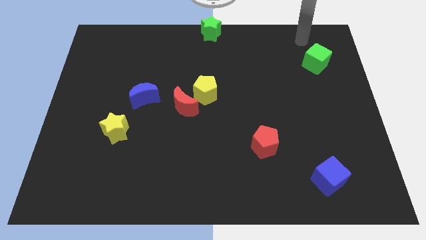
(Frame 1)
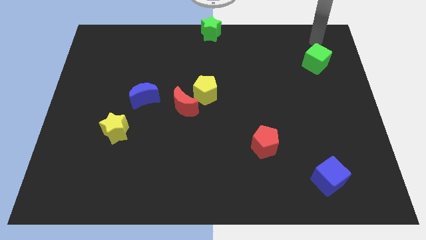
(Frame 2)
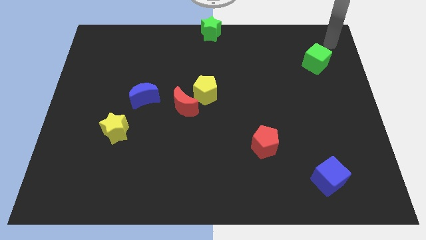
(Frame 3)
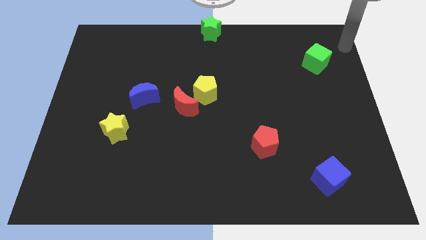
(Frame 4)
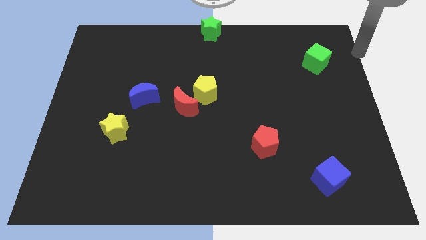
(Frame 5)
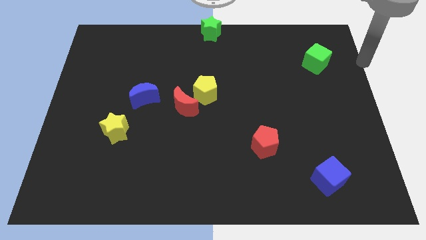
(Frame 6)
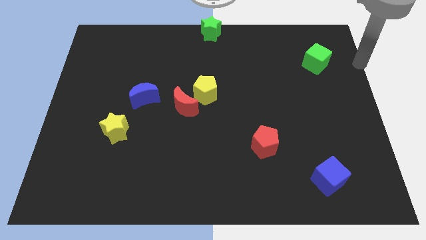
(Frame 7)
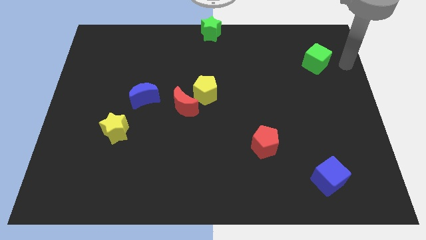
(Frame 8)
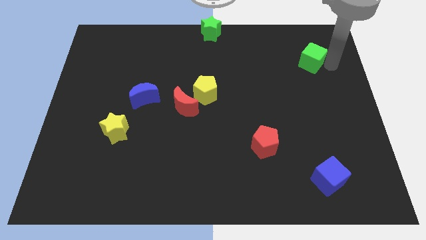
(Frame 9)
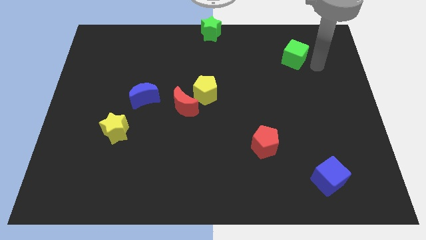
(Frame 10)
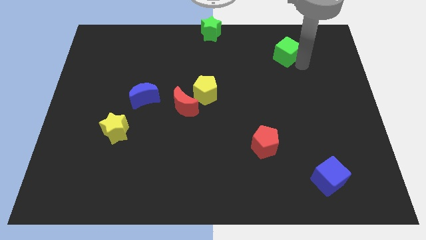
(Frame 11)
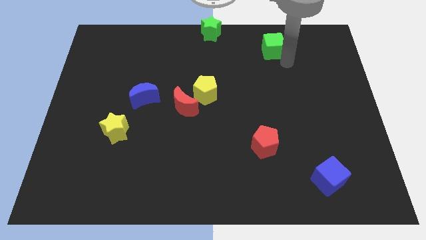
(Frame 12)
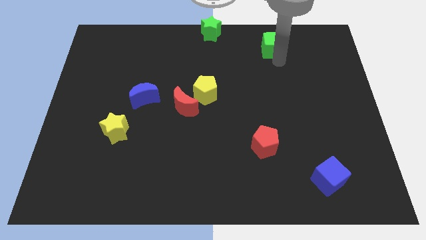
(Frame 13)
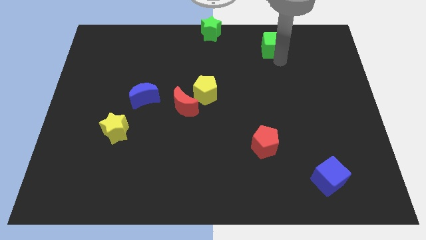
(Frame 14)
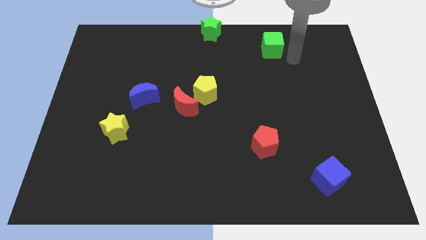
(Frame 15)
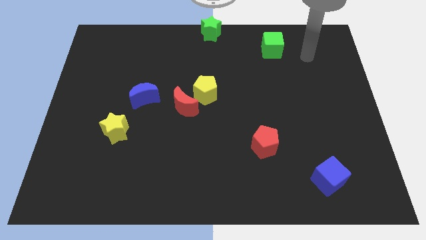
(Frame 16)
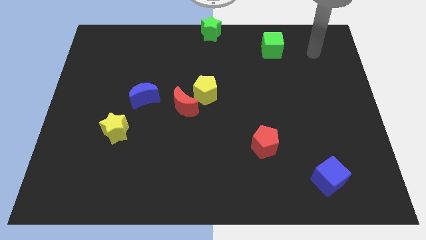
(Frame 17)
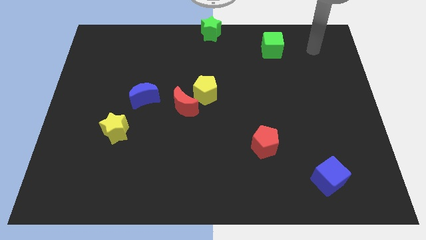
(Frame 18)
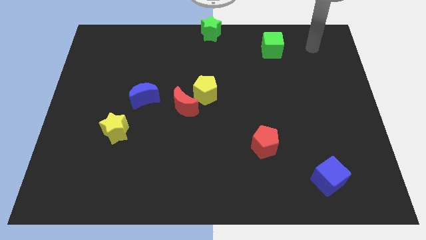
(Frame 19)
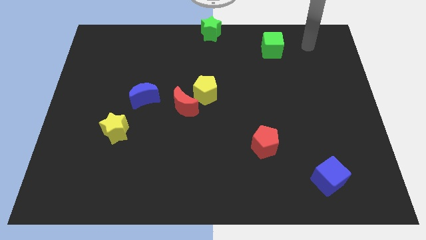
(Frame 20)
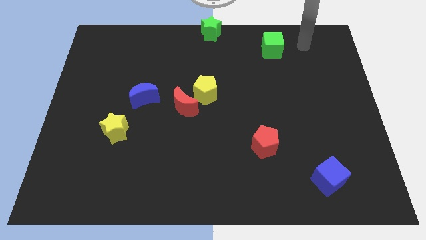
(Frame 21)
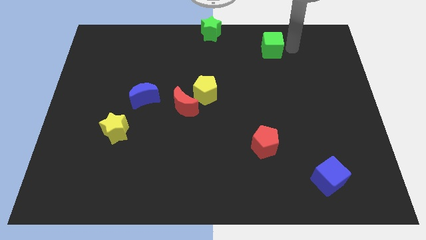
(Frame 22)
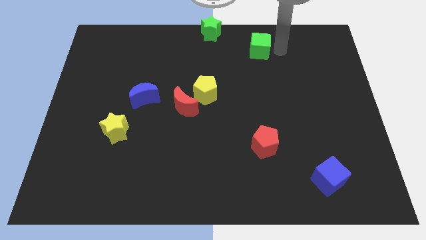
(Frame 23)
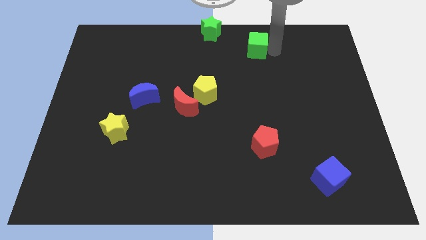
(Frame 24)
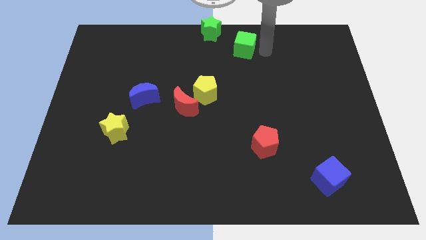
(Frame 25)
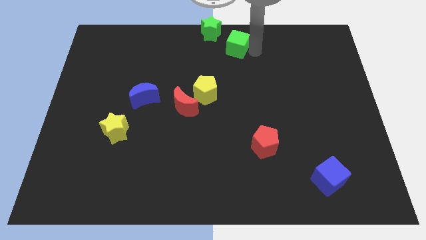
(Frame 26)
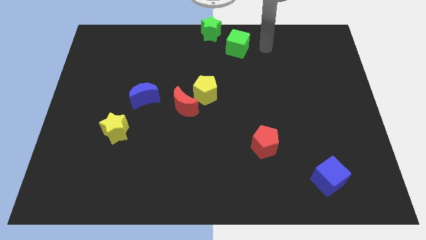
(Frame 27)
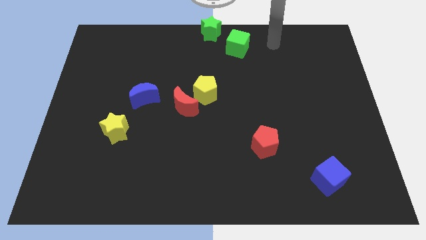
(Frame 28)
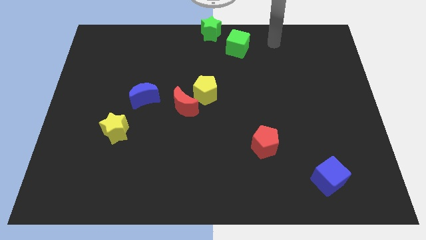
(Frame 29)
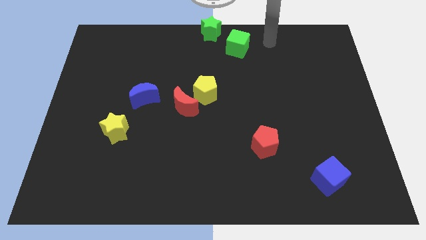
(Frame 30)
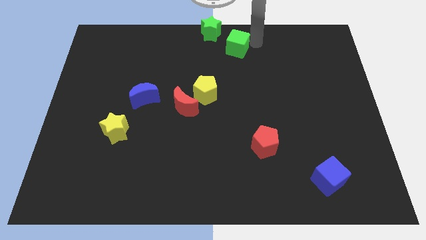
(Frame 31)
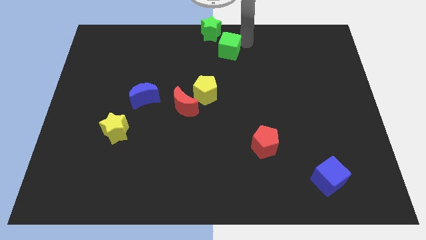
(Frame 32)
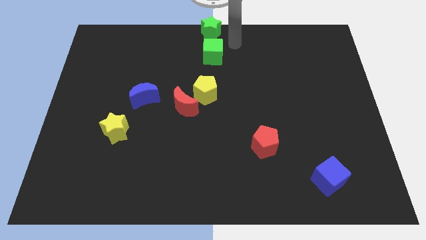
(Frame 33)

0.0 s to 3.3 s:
move the green cube below the green star at the top

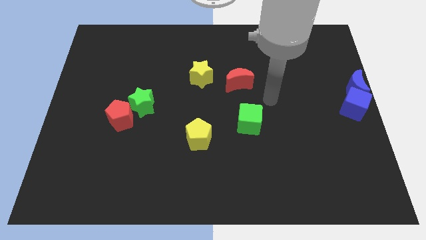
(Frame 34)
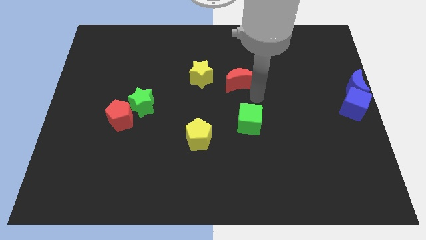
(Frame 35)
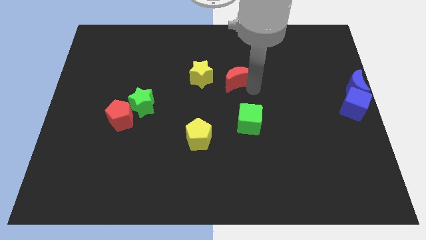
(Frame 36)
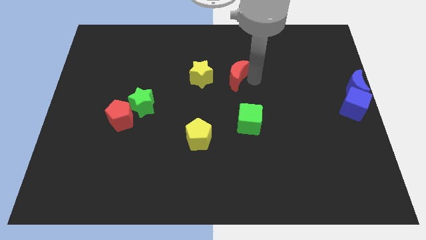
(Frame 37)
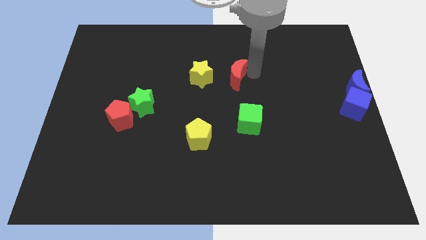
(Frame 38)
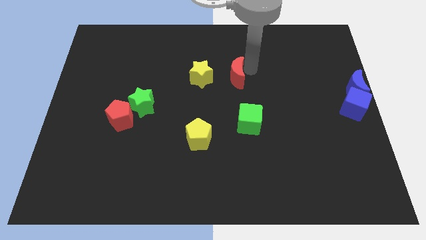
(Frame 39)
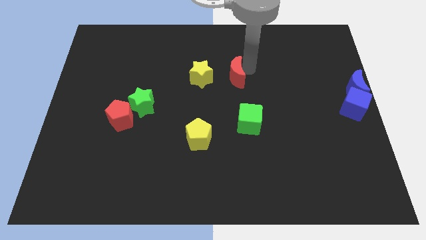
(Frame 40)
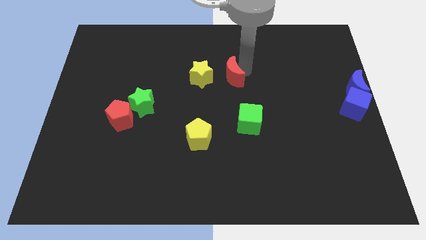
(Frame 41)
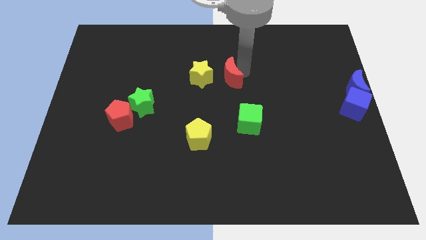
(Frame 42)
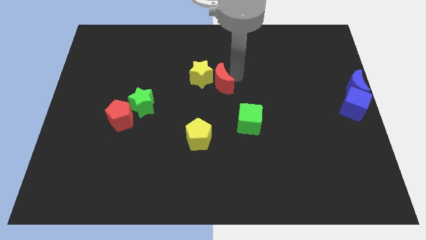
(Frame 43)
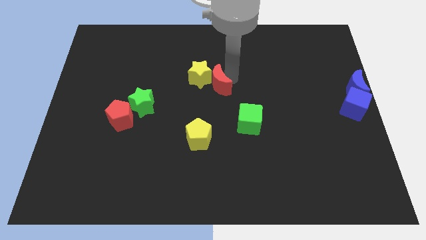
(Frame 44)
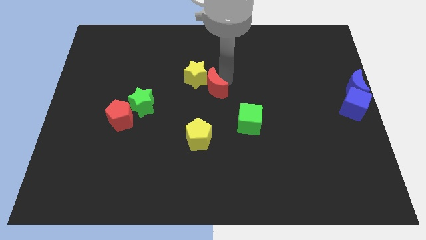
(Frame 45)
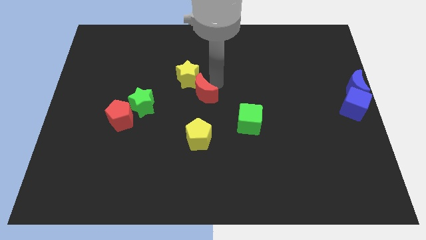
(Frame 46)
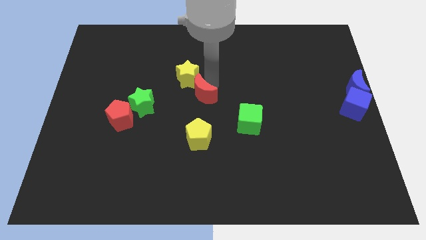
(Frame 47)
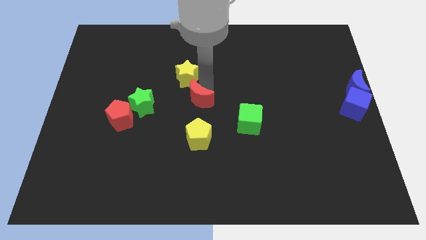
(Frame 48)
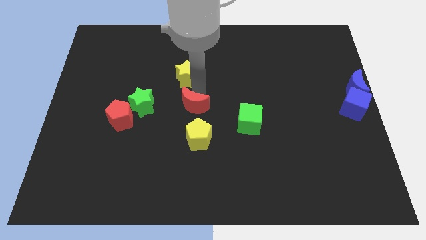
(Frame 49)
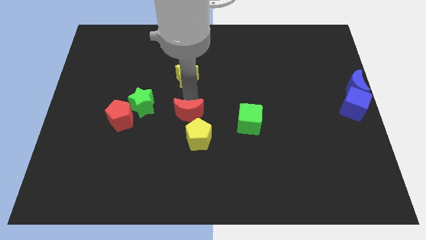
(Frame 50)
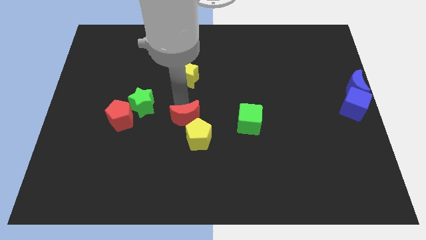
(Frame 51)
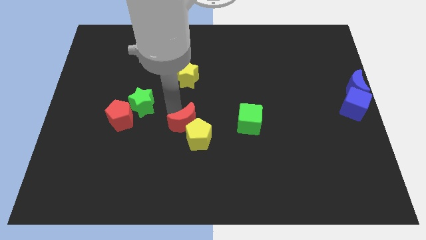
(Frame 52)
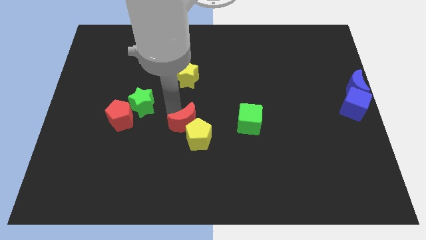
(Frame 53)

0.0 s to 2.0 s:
place the red crescent above the yellow pentagon

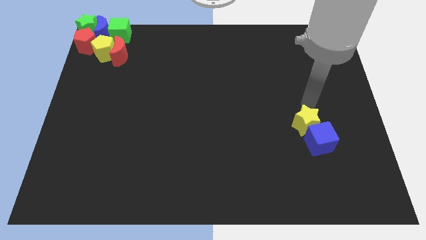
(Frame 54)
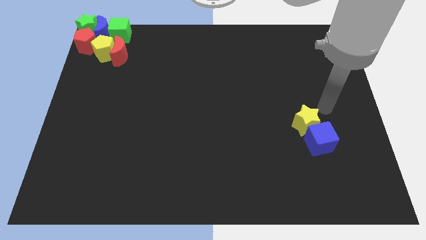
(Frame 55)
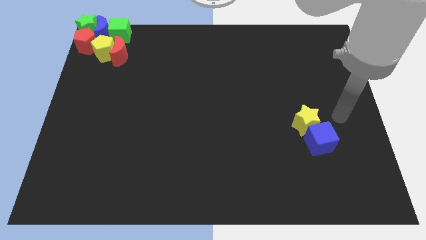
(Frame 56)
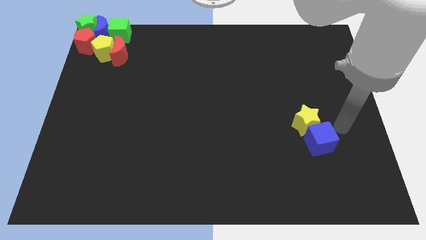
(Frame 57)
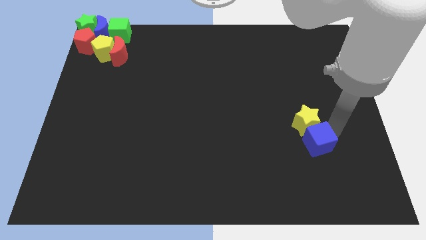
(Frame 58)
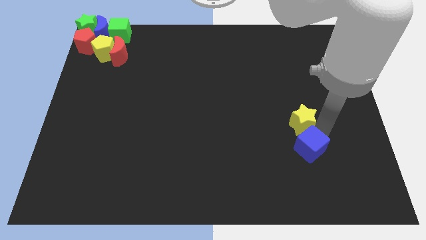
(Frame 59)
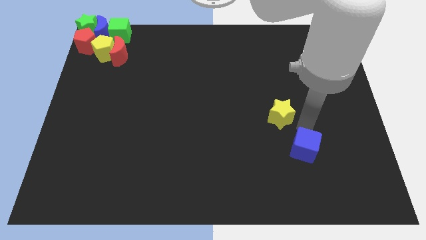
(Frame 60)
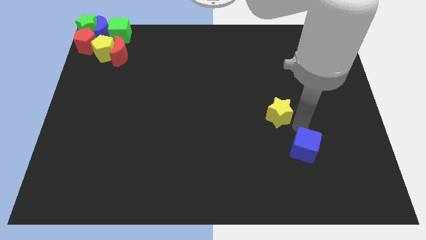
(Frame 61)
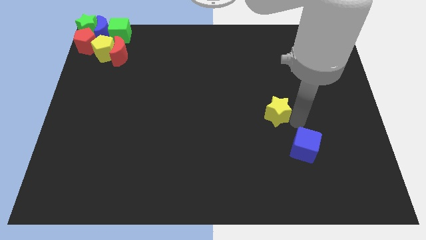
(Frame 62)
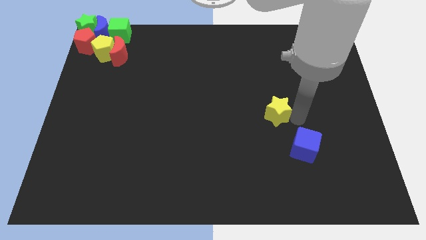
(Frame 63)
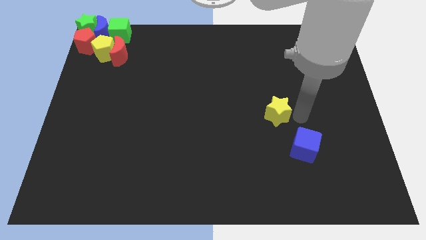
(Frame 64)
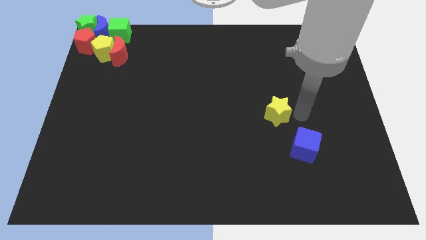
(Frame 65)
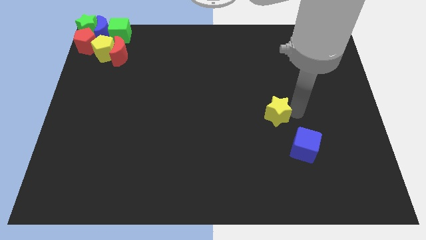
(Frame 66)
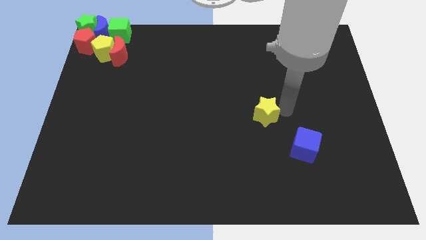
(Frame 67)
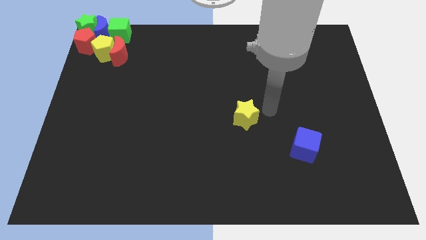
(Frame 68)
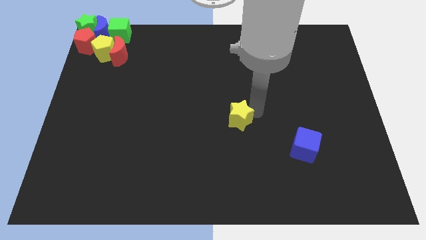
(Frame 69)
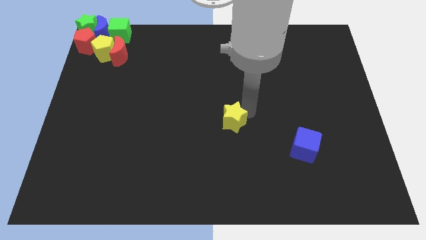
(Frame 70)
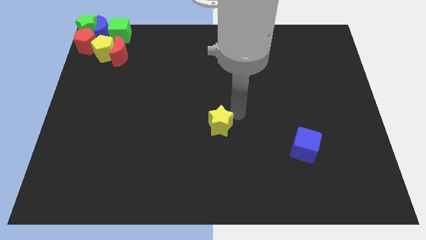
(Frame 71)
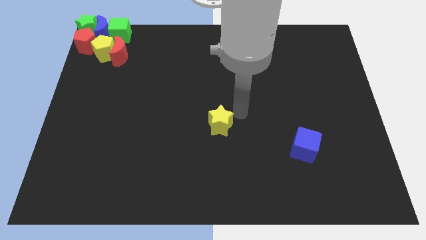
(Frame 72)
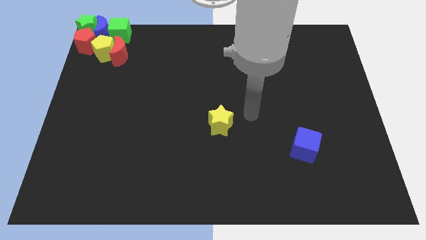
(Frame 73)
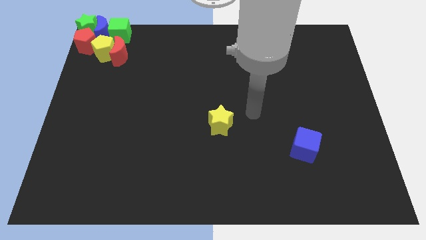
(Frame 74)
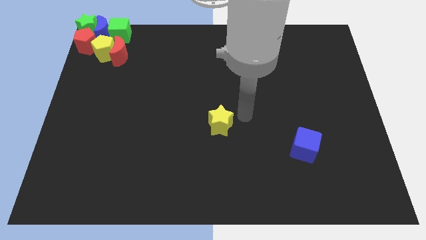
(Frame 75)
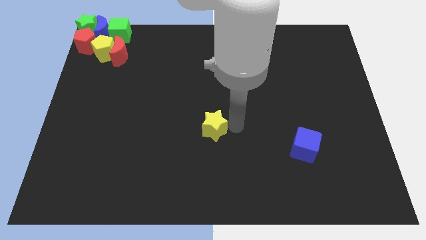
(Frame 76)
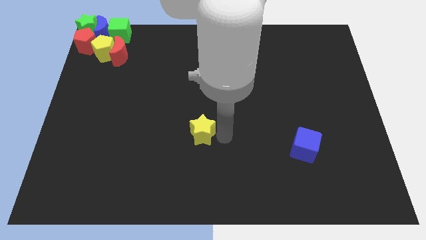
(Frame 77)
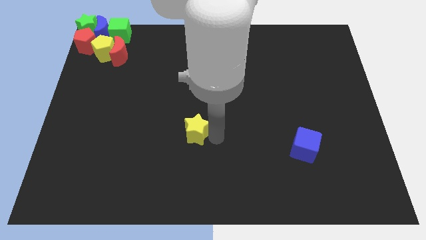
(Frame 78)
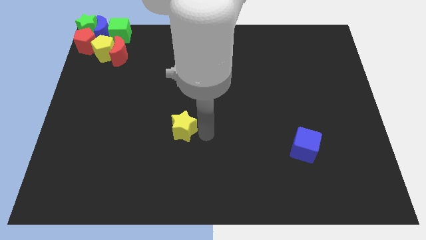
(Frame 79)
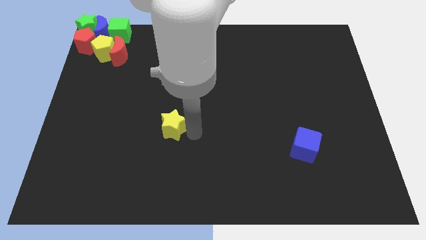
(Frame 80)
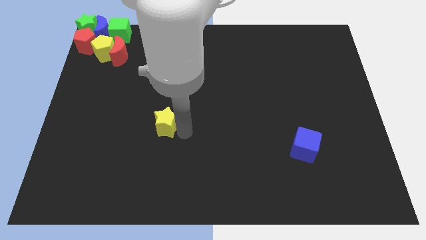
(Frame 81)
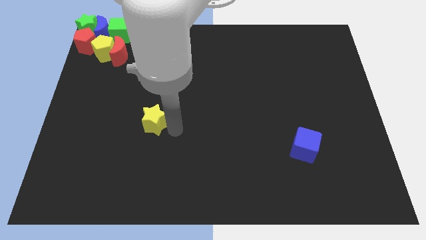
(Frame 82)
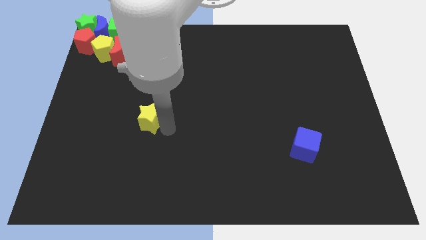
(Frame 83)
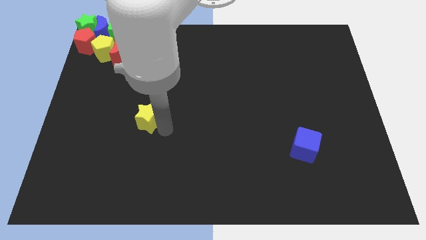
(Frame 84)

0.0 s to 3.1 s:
separate yellow star from blue cube

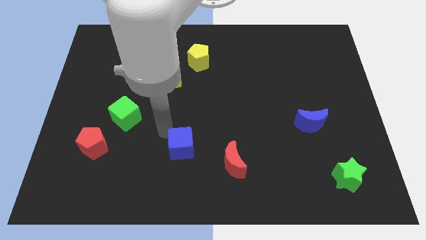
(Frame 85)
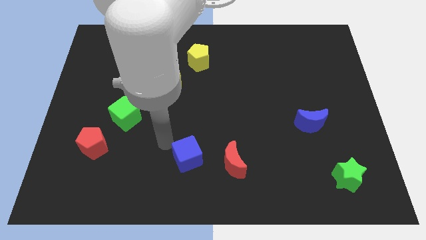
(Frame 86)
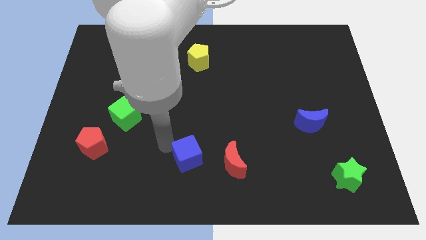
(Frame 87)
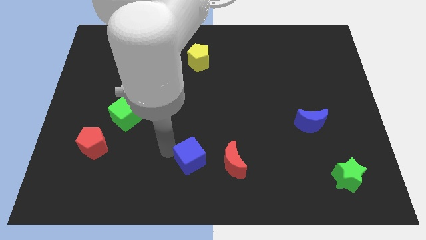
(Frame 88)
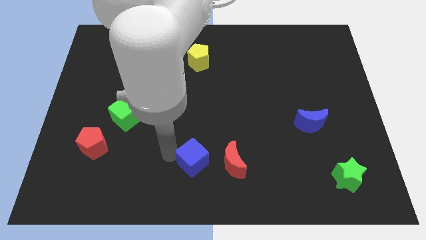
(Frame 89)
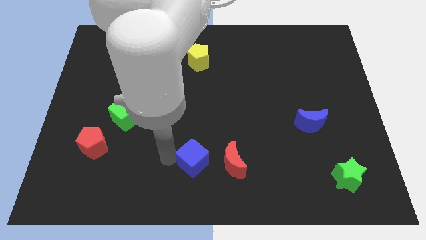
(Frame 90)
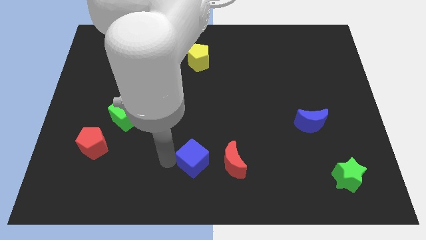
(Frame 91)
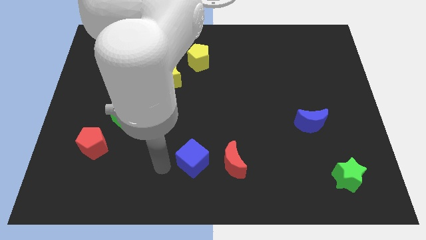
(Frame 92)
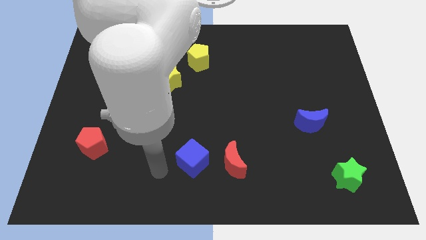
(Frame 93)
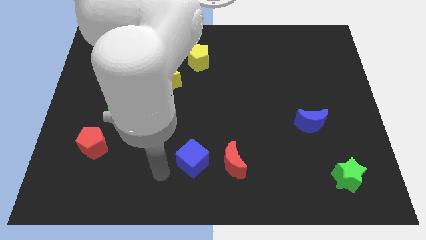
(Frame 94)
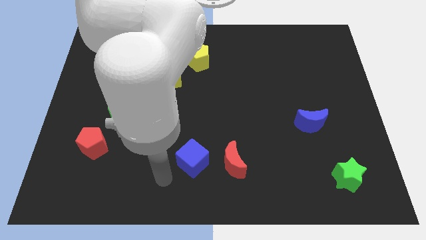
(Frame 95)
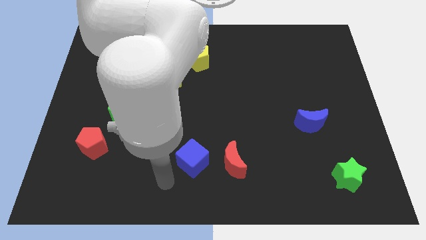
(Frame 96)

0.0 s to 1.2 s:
put the blue cube to the left side of red moon
